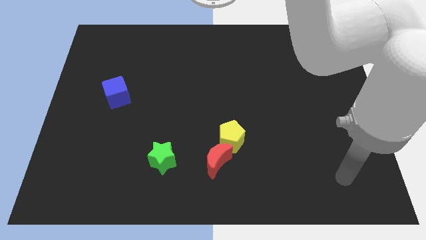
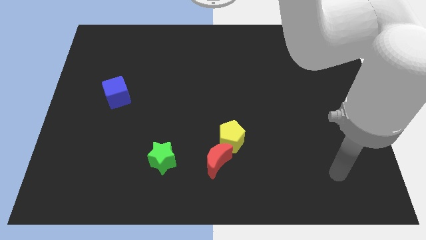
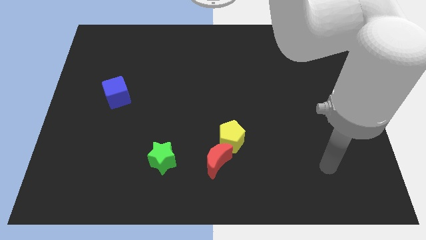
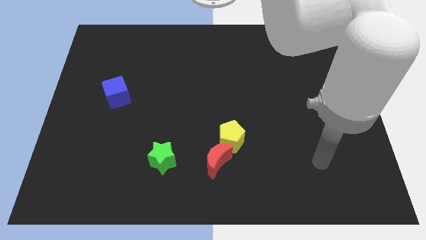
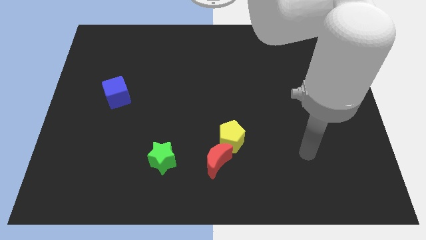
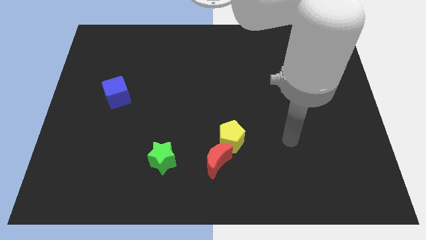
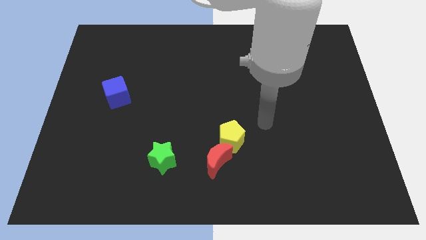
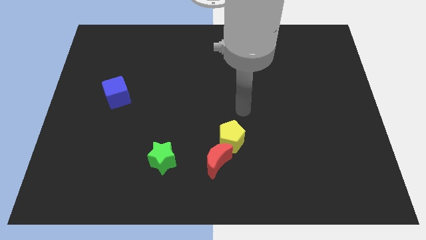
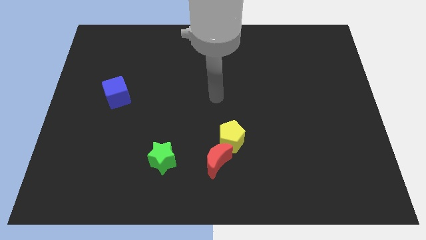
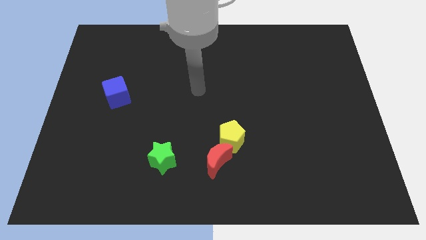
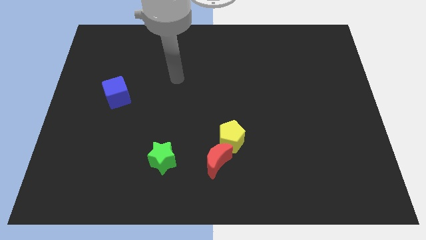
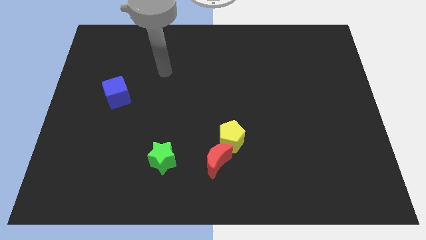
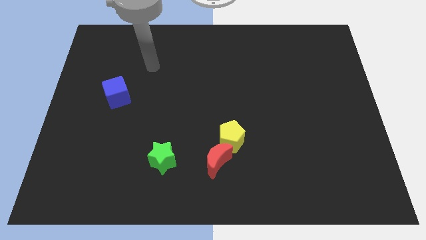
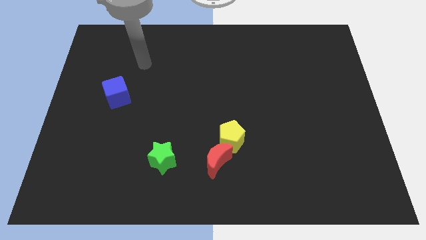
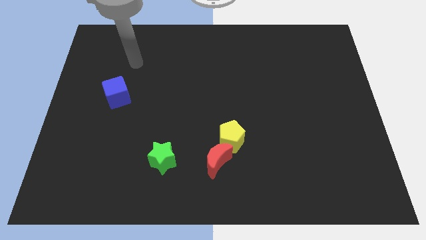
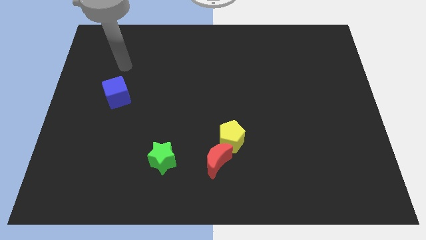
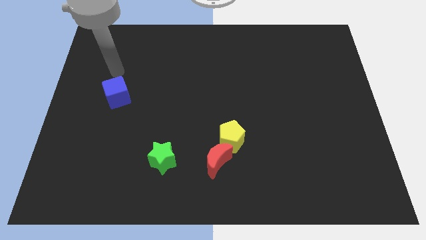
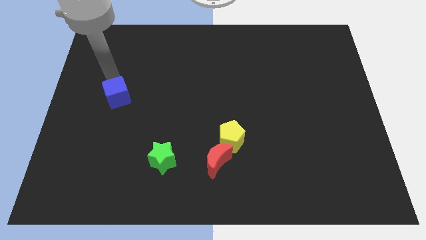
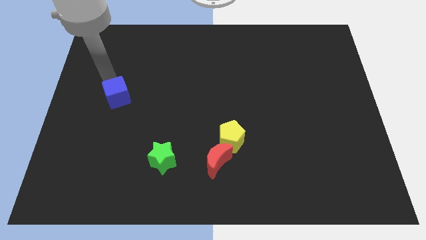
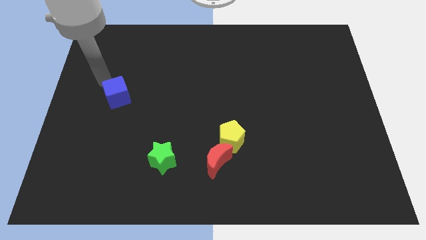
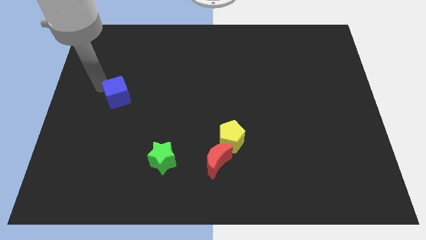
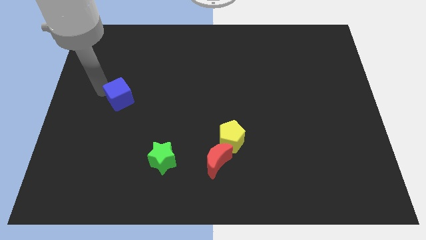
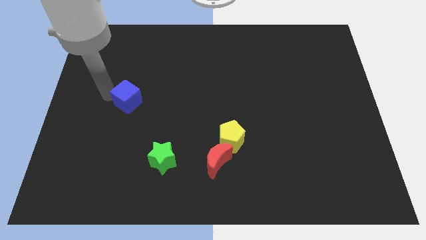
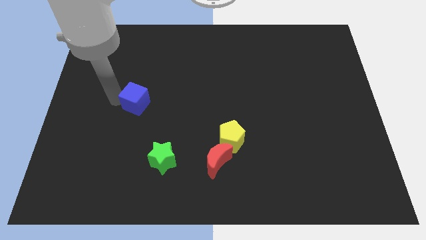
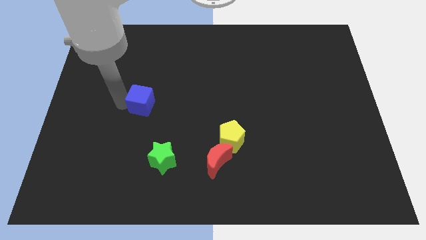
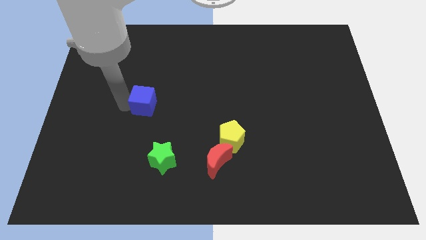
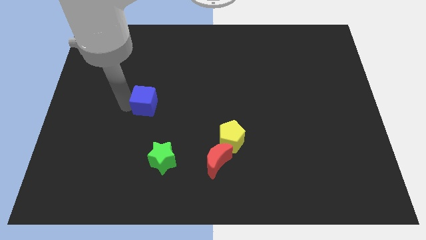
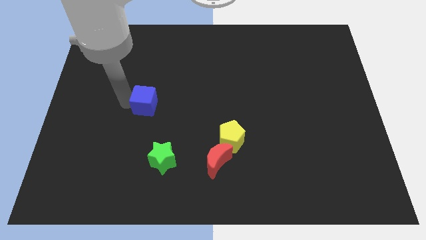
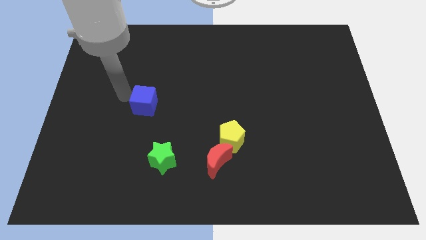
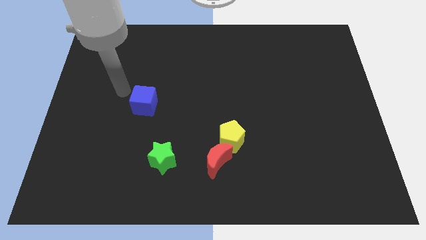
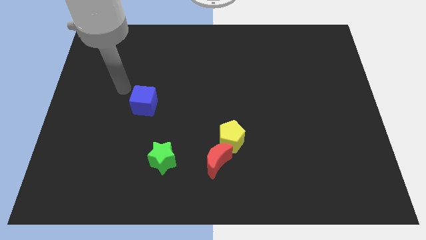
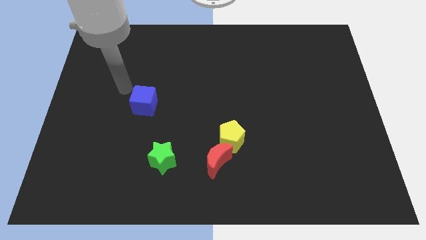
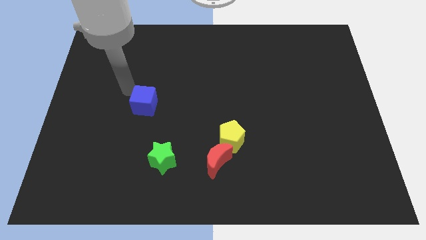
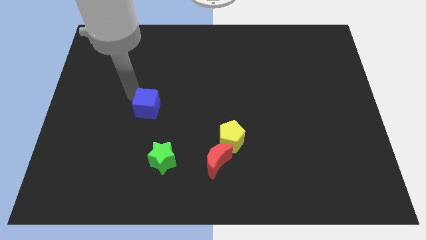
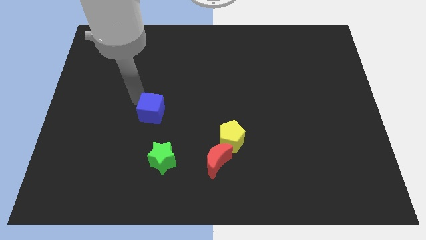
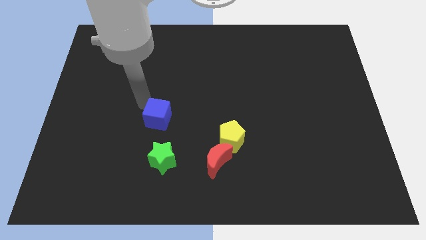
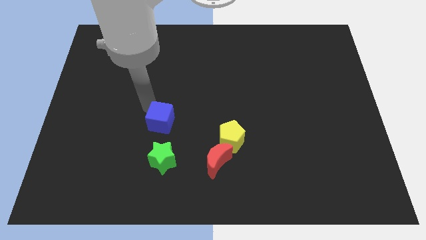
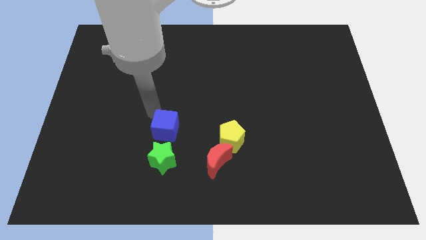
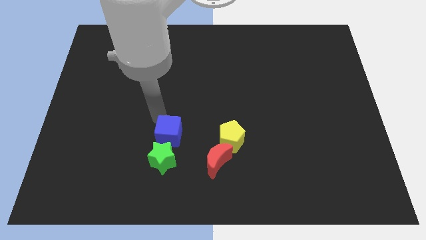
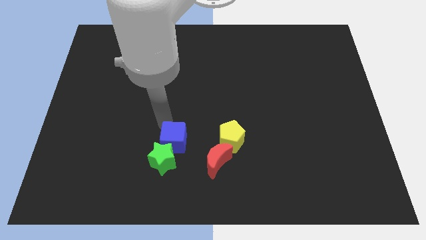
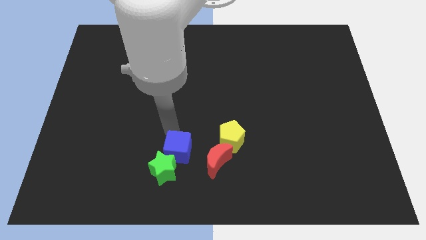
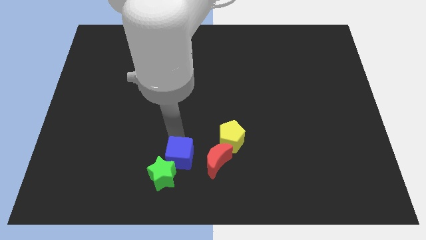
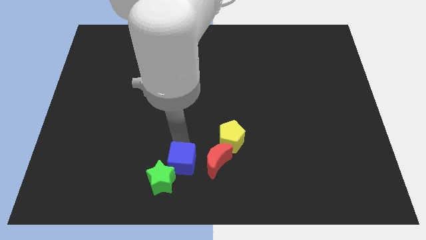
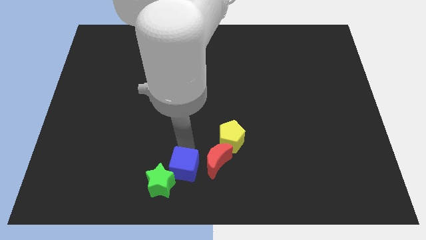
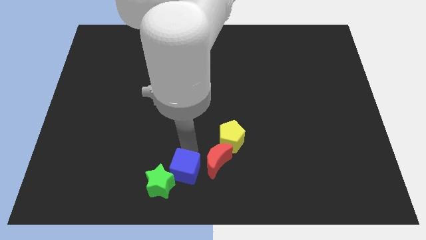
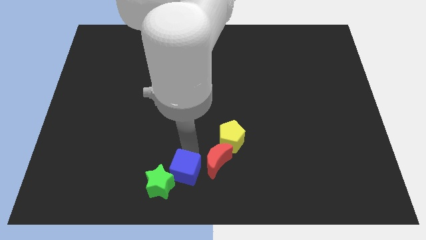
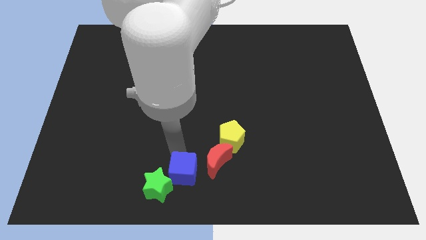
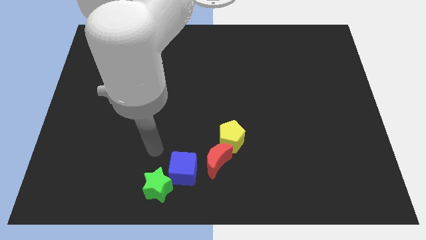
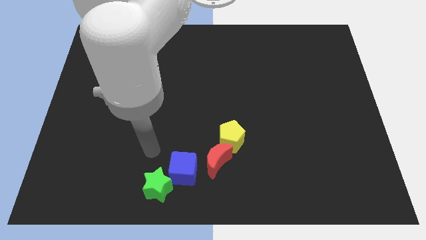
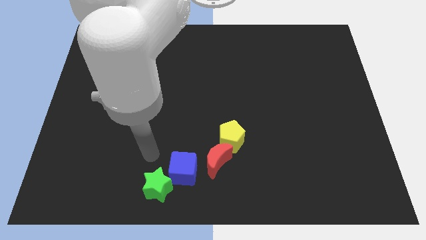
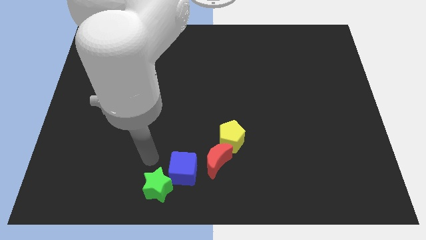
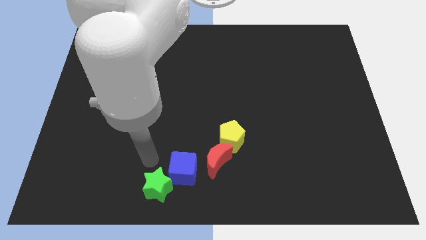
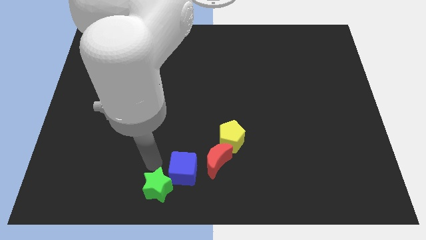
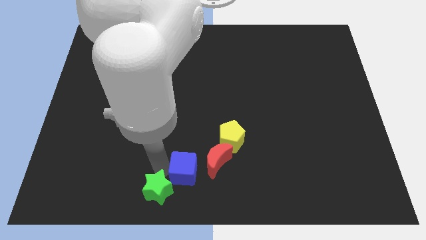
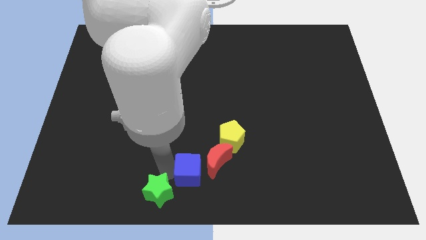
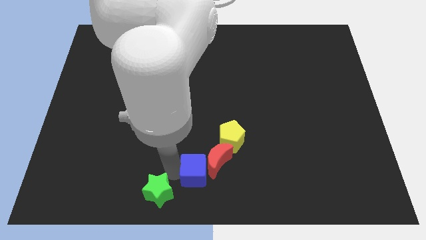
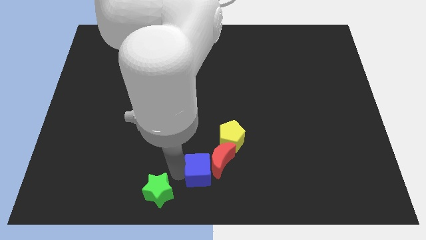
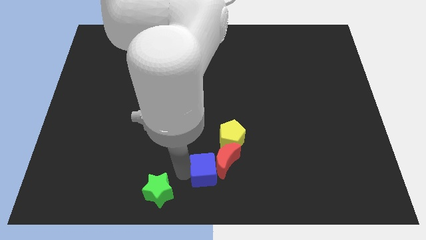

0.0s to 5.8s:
put the blue block close to the moon

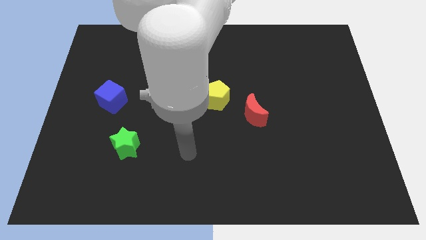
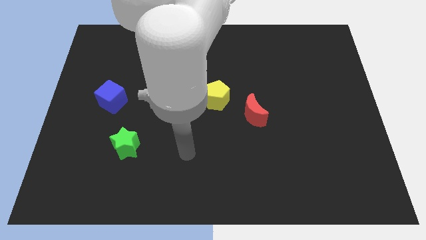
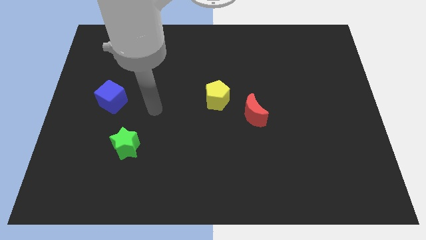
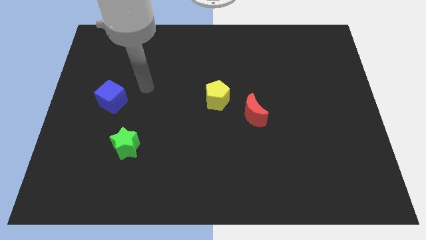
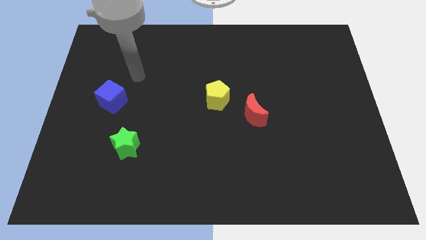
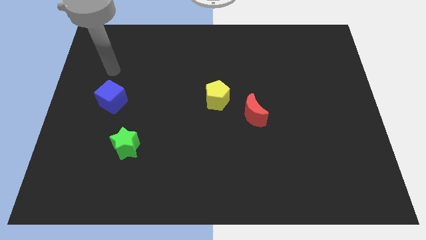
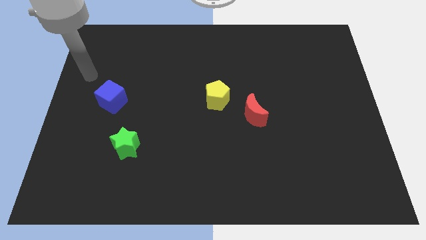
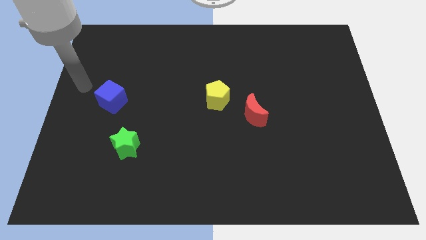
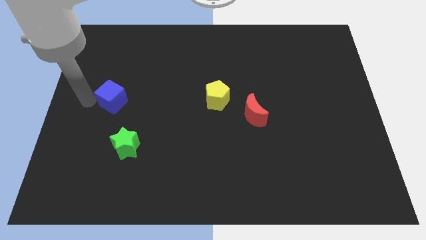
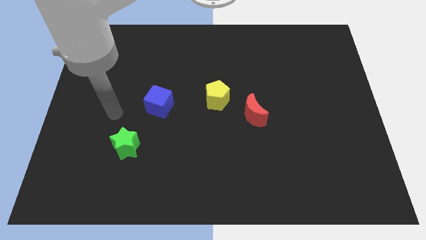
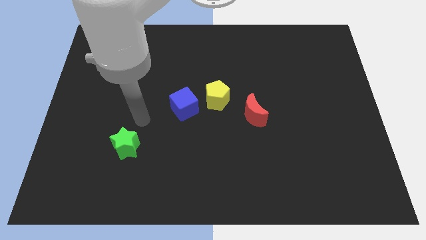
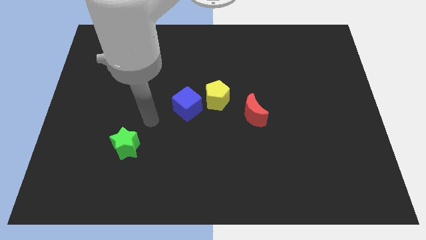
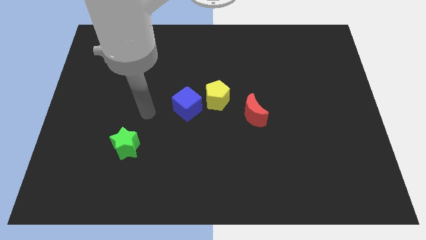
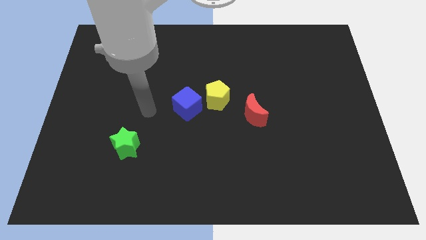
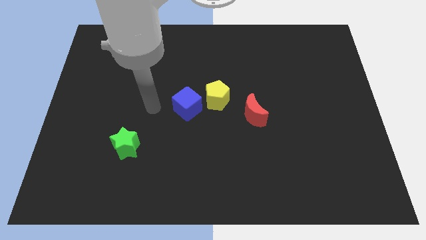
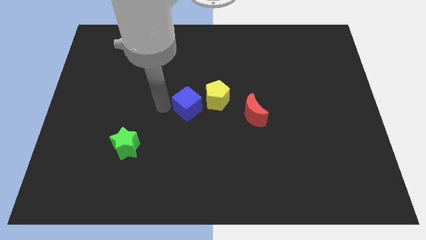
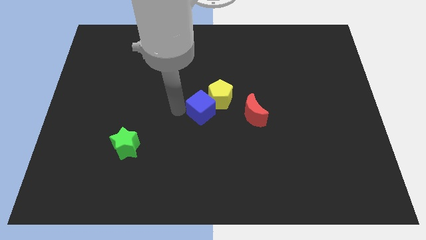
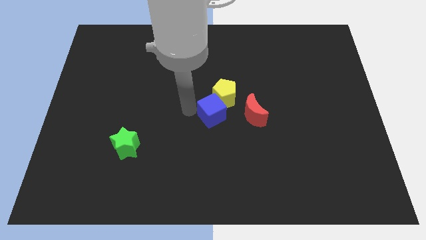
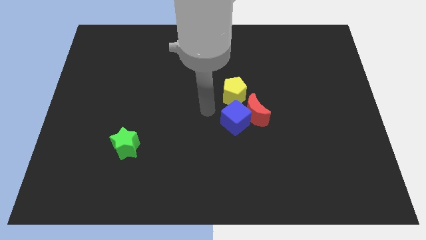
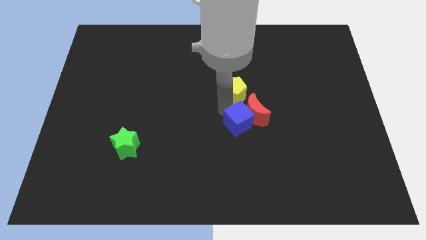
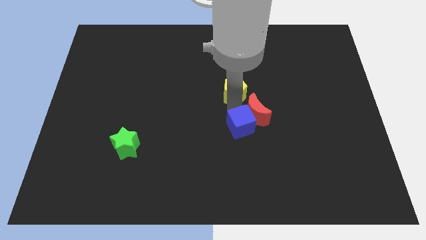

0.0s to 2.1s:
push the blue block next to the red block

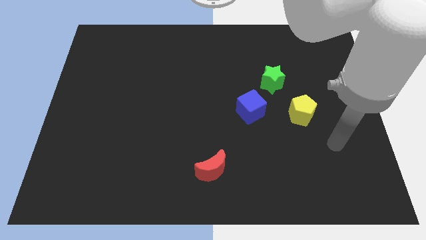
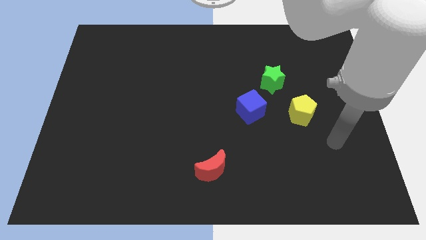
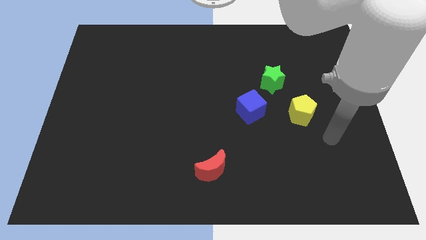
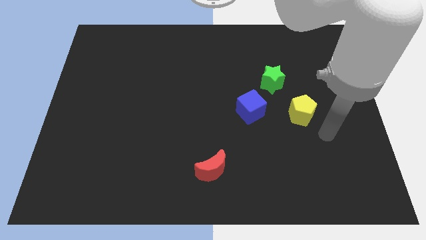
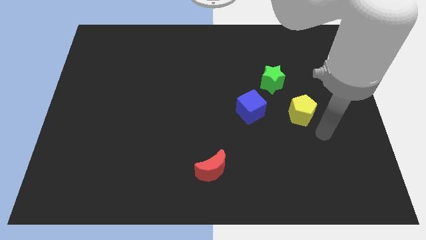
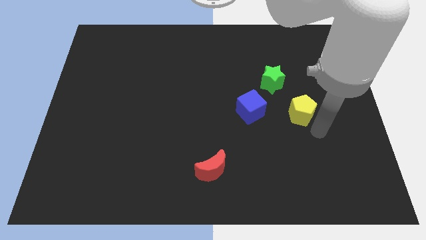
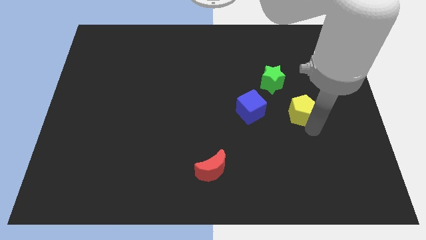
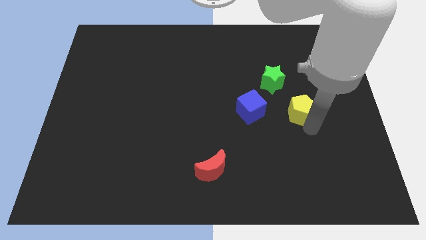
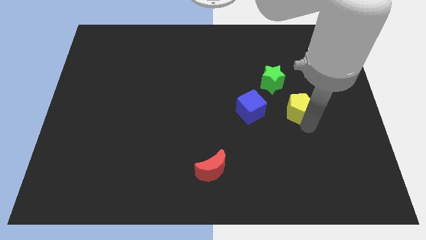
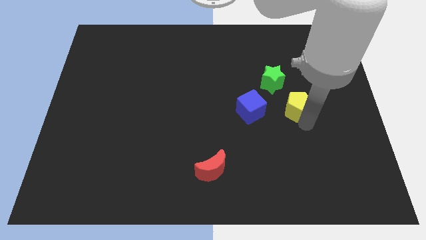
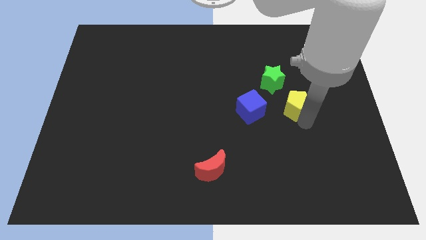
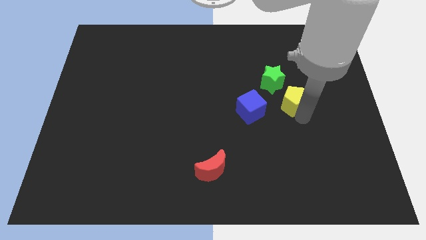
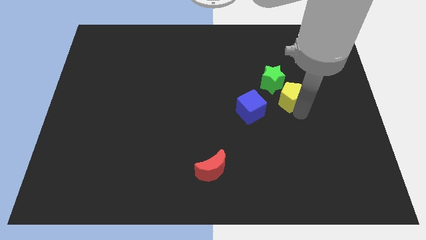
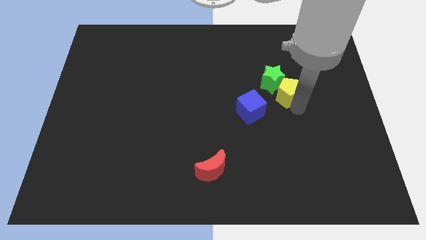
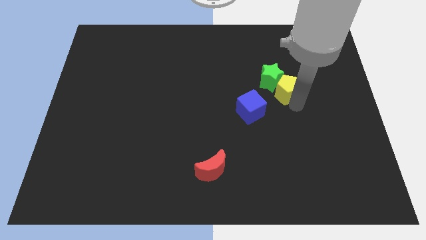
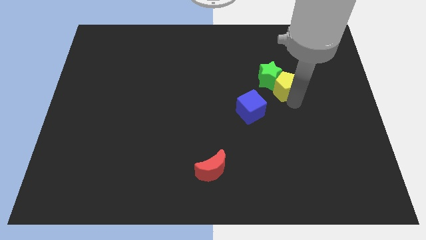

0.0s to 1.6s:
slide the yellow pentagon close to the green block
